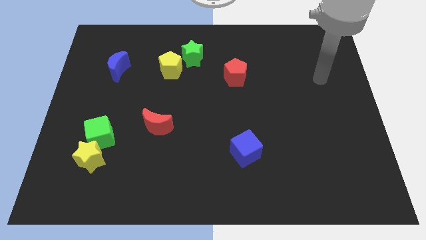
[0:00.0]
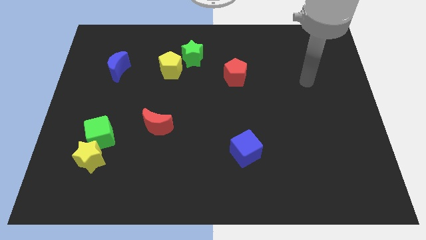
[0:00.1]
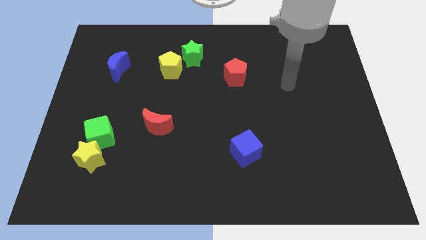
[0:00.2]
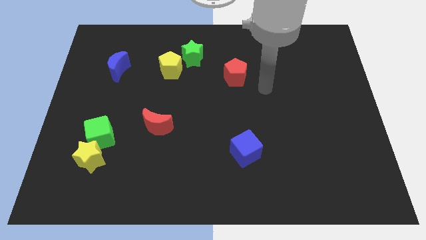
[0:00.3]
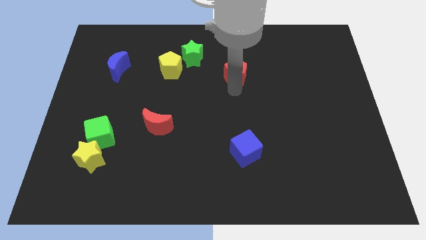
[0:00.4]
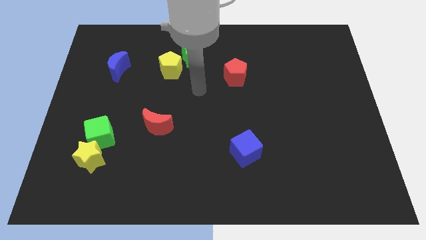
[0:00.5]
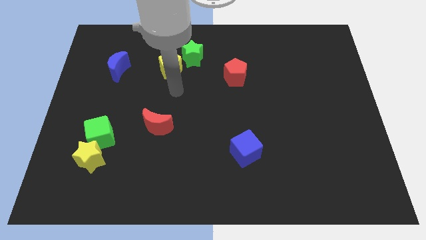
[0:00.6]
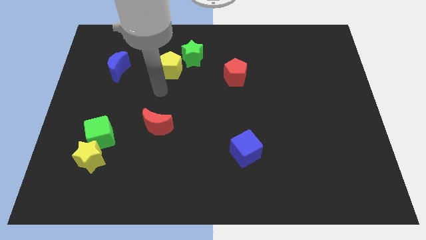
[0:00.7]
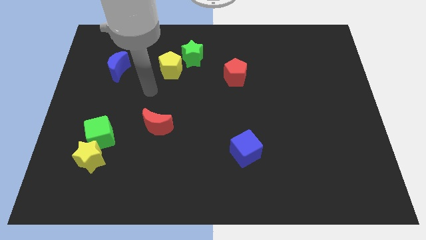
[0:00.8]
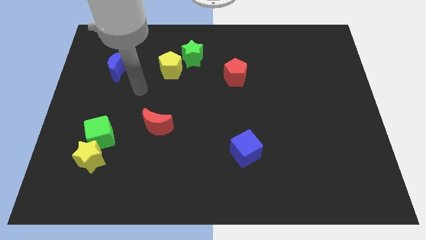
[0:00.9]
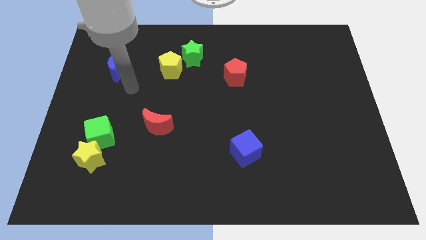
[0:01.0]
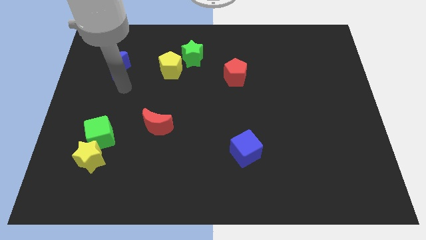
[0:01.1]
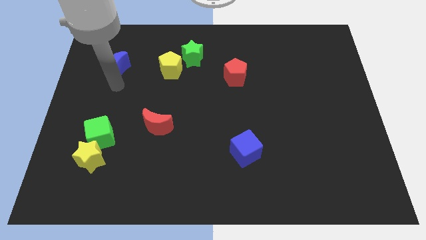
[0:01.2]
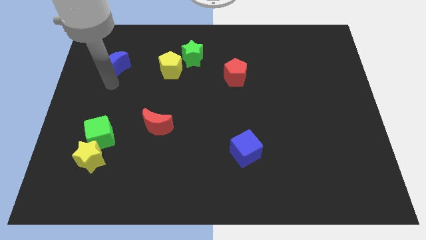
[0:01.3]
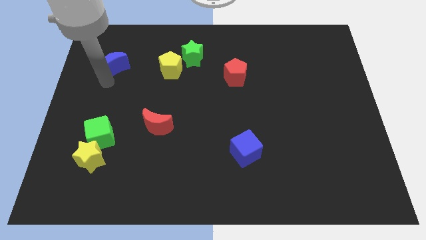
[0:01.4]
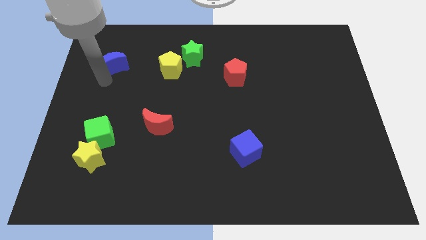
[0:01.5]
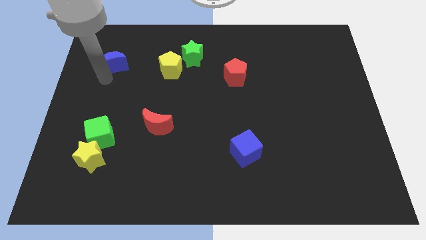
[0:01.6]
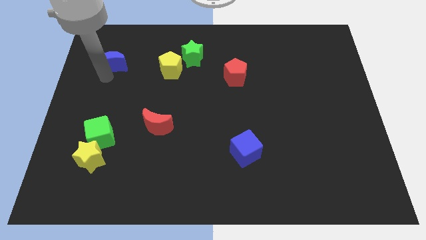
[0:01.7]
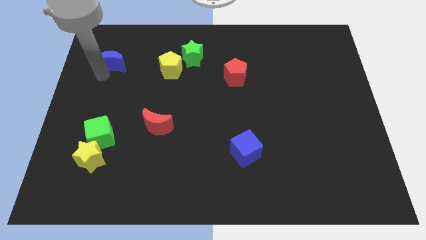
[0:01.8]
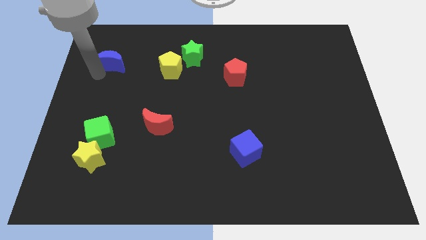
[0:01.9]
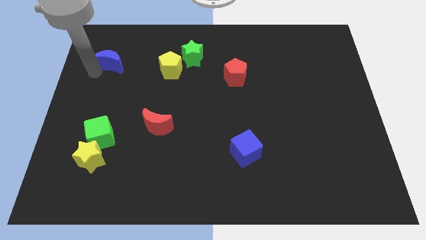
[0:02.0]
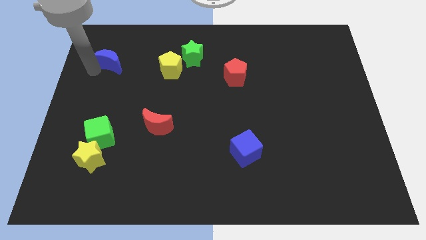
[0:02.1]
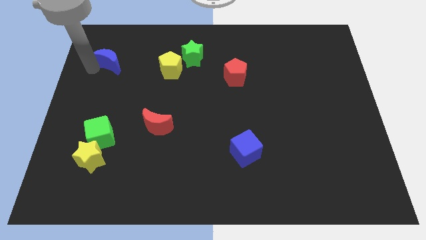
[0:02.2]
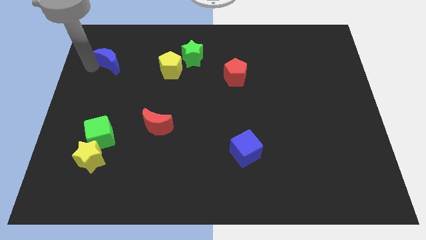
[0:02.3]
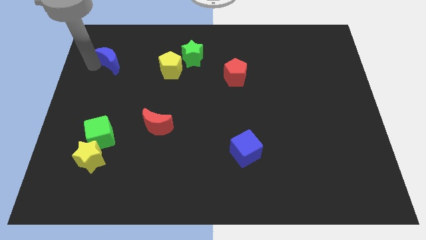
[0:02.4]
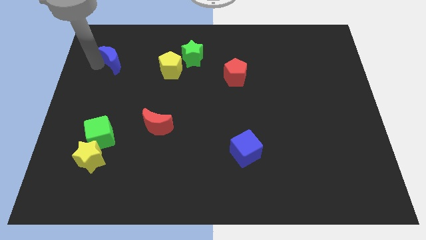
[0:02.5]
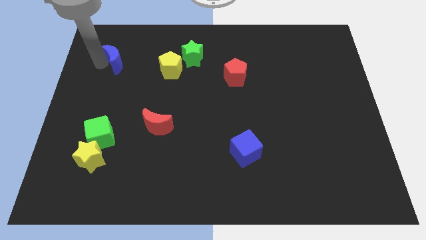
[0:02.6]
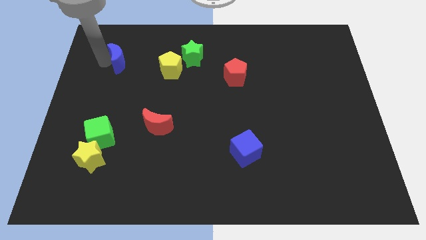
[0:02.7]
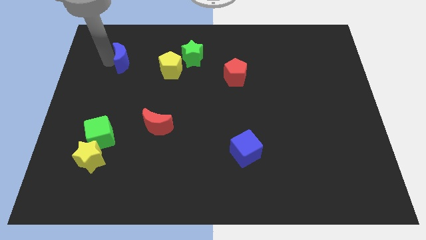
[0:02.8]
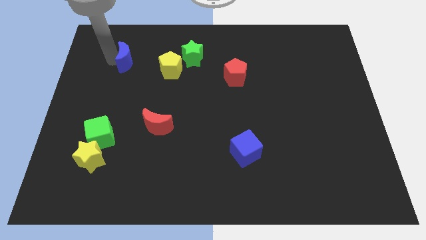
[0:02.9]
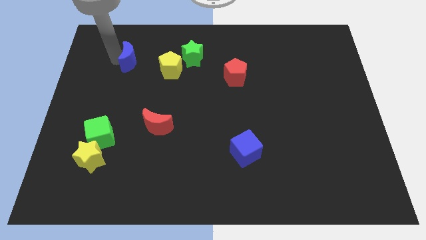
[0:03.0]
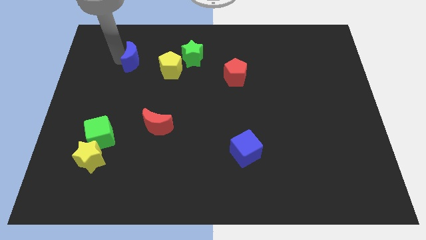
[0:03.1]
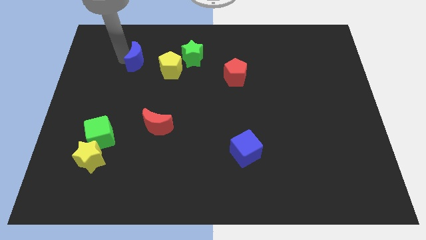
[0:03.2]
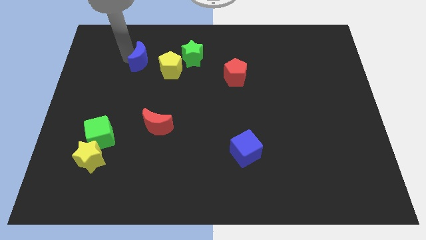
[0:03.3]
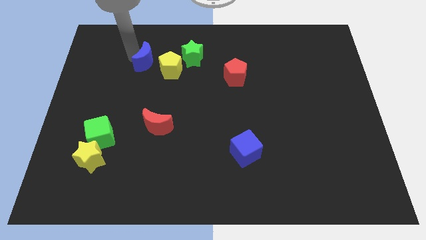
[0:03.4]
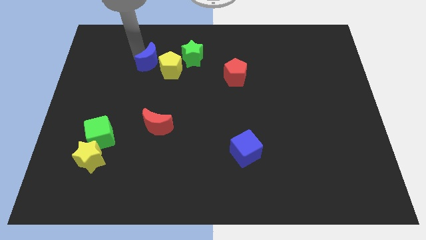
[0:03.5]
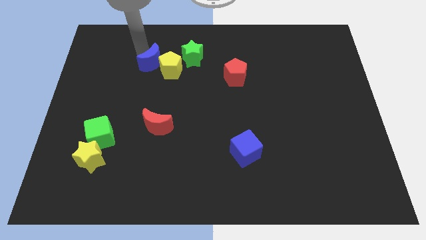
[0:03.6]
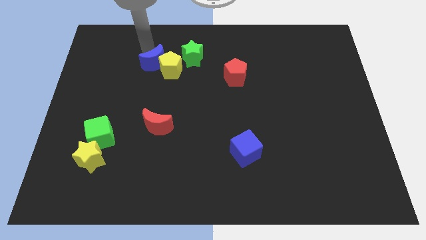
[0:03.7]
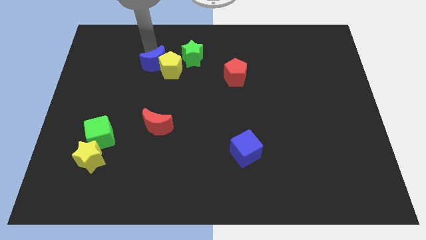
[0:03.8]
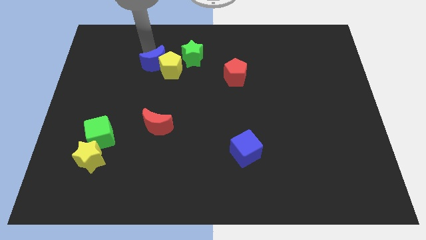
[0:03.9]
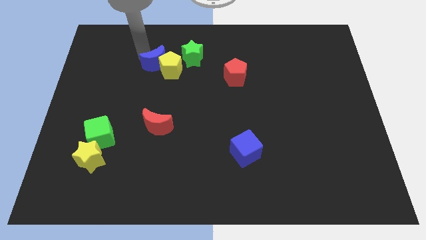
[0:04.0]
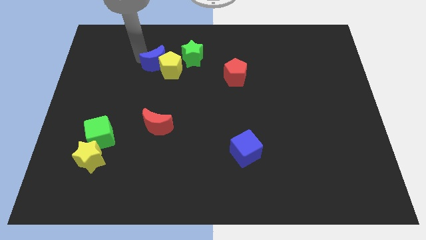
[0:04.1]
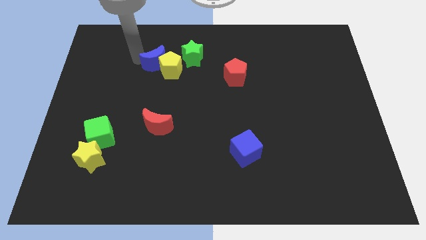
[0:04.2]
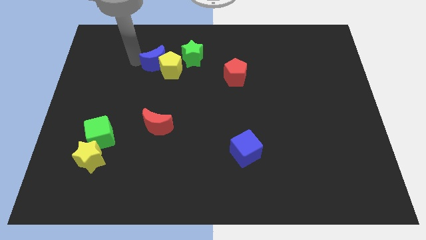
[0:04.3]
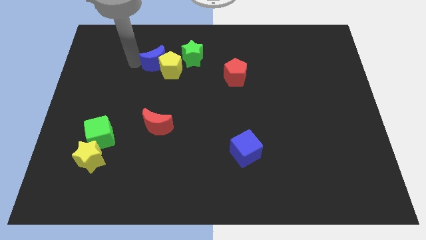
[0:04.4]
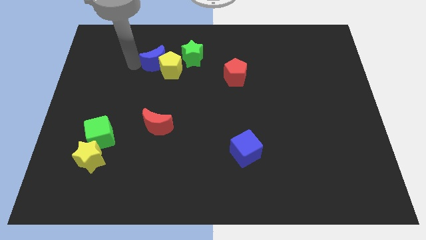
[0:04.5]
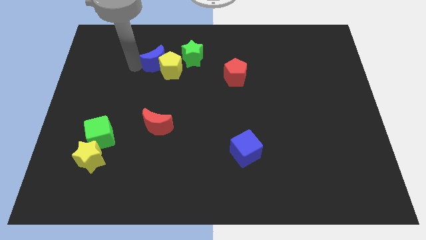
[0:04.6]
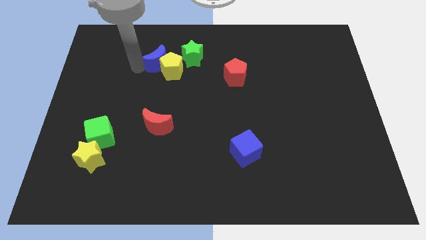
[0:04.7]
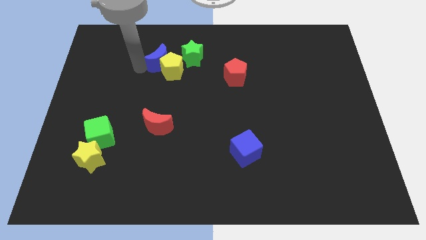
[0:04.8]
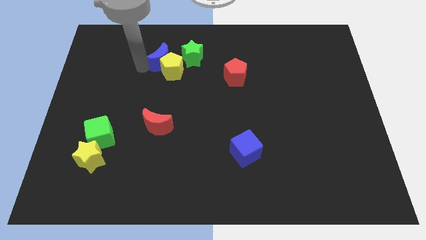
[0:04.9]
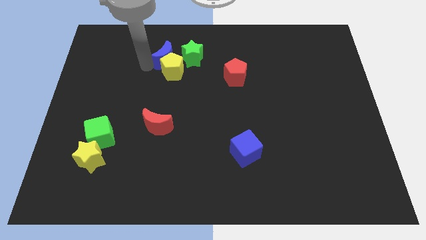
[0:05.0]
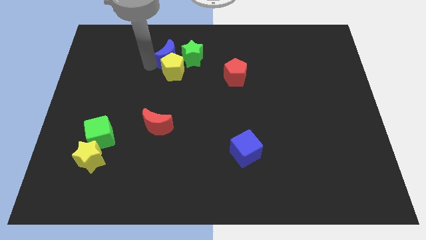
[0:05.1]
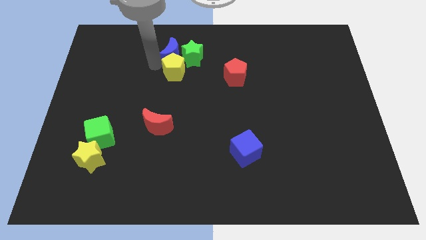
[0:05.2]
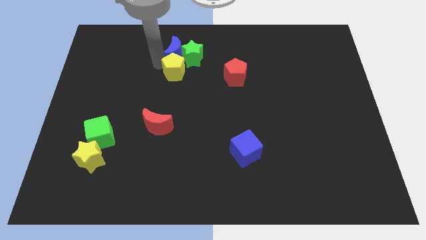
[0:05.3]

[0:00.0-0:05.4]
slide the blue moon next to the green star

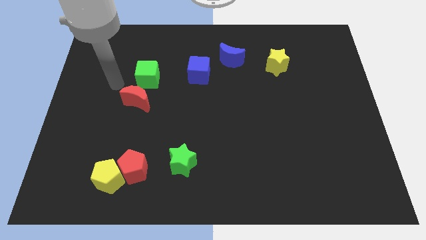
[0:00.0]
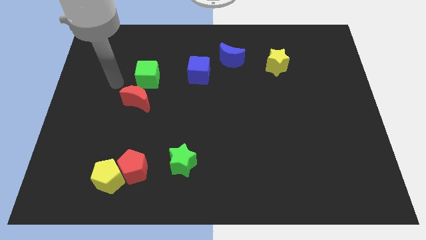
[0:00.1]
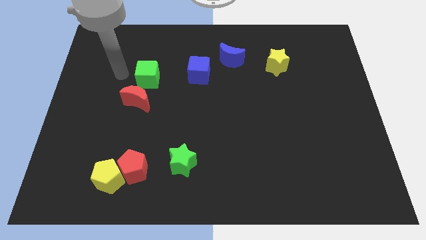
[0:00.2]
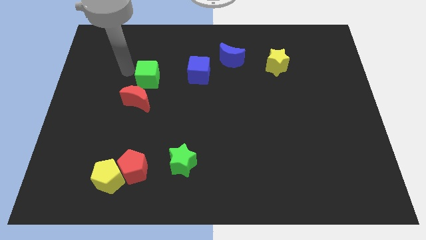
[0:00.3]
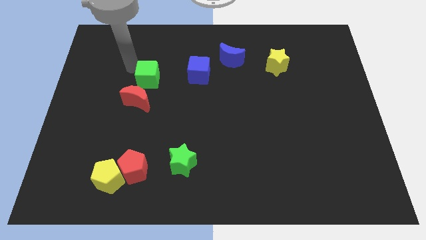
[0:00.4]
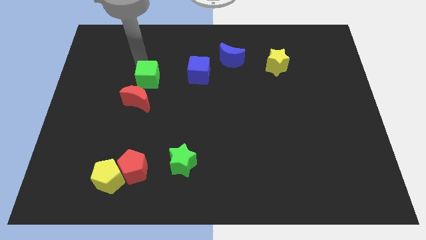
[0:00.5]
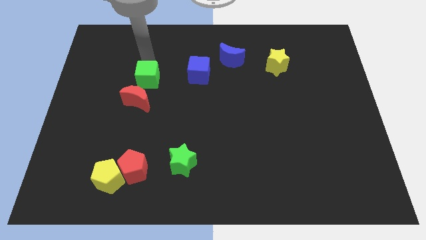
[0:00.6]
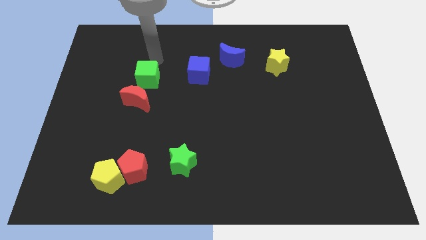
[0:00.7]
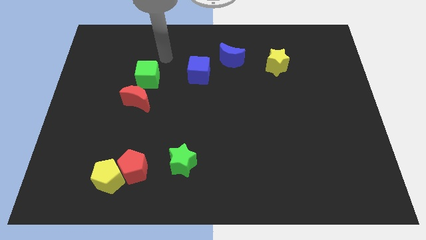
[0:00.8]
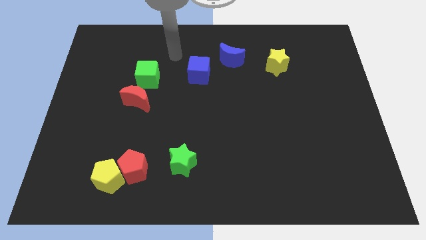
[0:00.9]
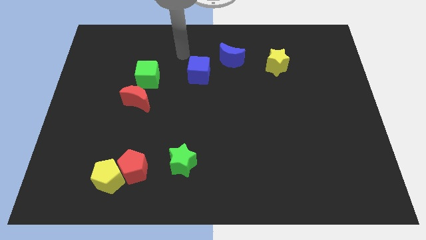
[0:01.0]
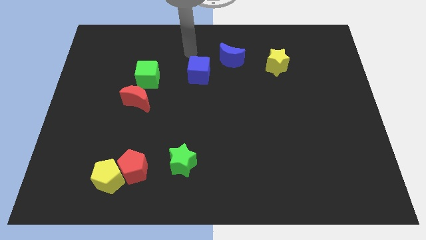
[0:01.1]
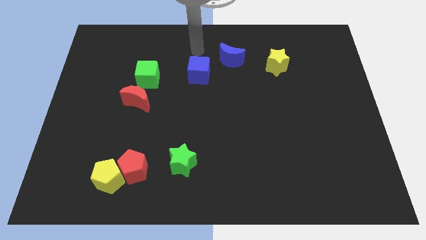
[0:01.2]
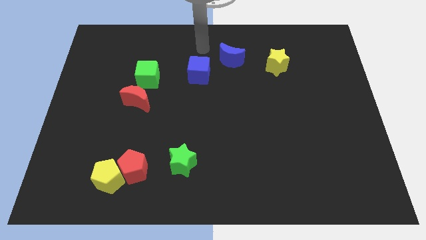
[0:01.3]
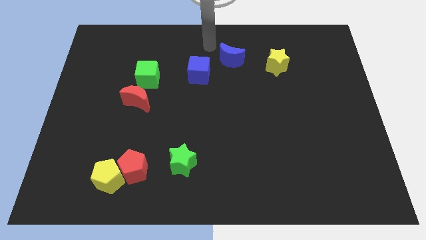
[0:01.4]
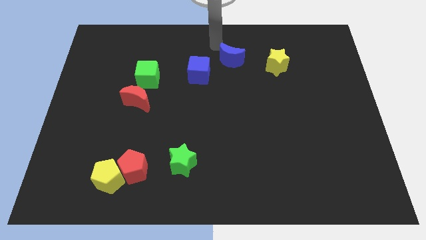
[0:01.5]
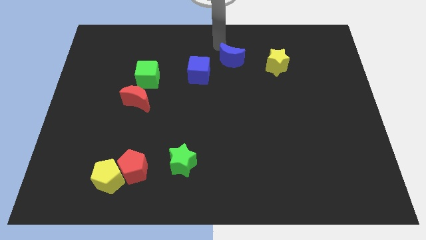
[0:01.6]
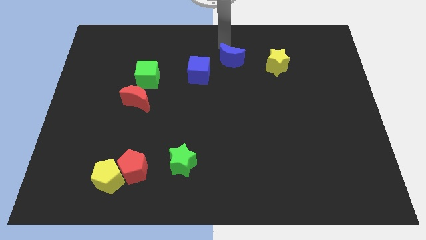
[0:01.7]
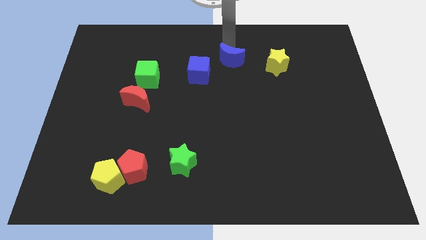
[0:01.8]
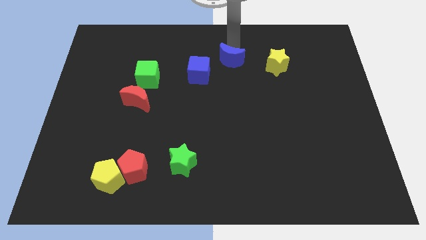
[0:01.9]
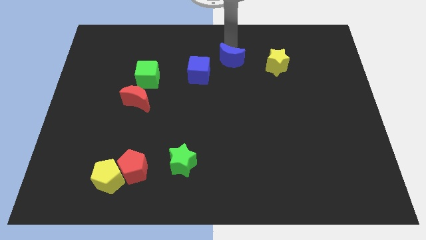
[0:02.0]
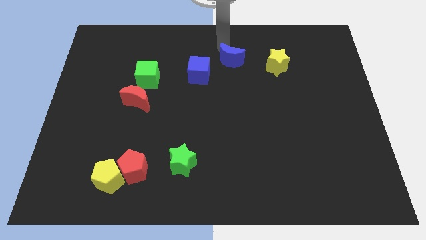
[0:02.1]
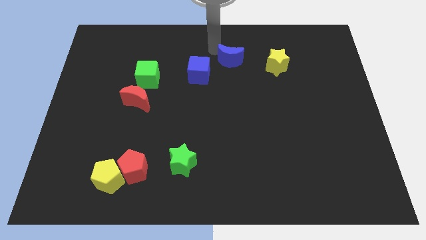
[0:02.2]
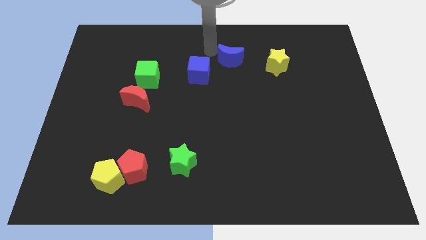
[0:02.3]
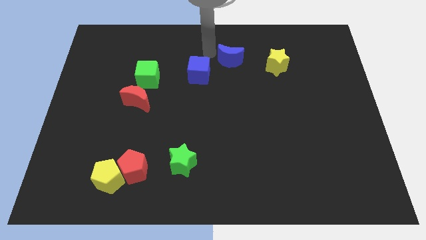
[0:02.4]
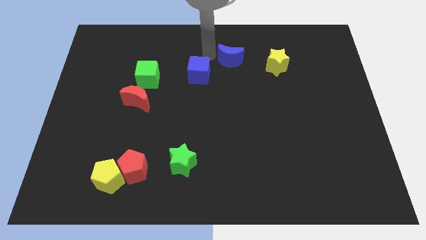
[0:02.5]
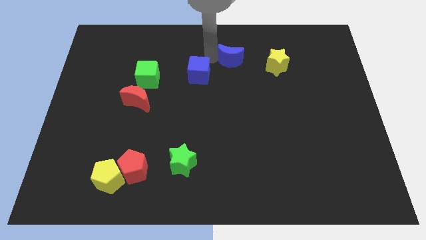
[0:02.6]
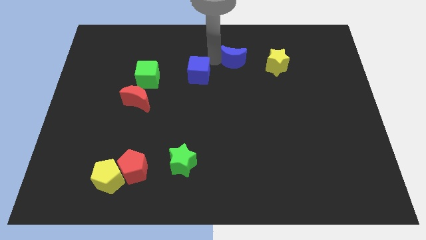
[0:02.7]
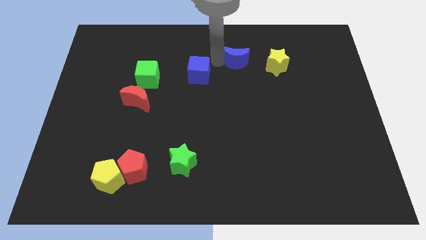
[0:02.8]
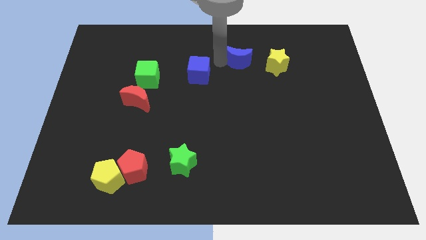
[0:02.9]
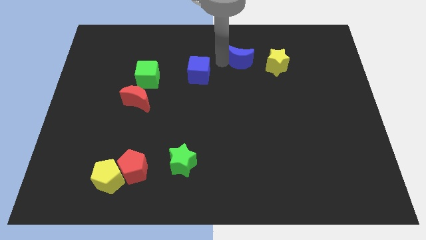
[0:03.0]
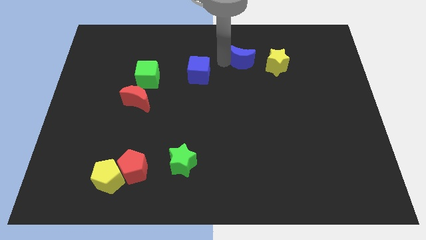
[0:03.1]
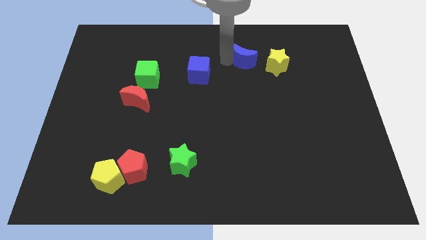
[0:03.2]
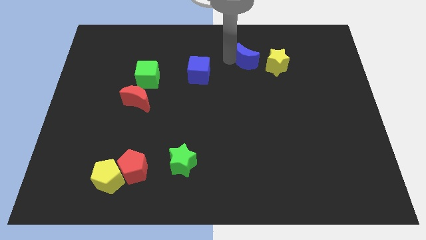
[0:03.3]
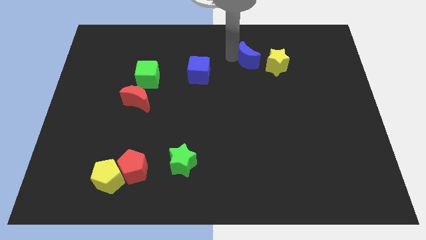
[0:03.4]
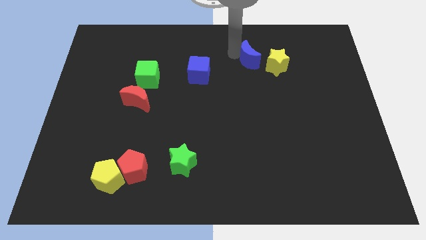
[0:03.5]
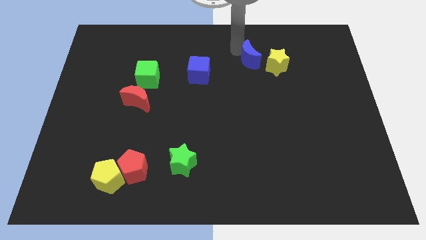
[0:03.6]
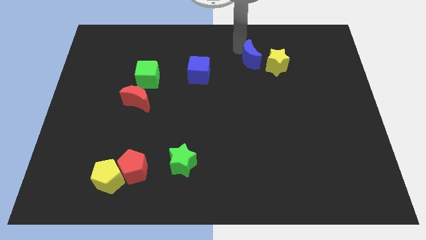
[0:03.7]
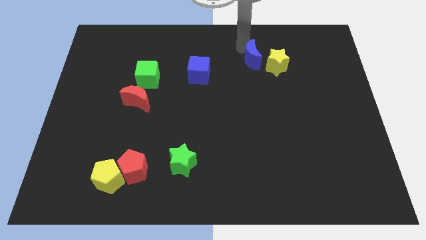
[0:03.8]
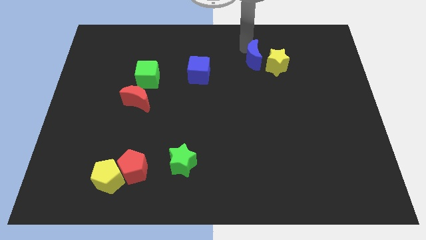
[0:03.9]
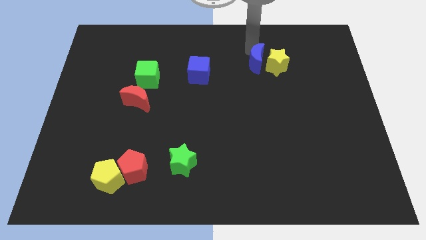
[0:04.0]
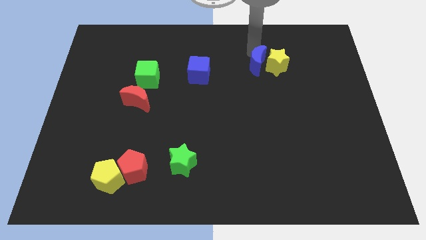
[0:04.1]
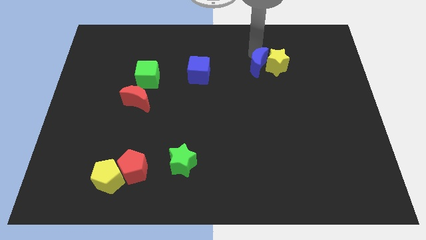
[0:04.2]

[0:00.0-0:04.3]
put the blue moon next to the yellow star
